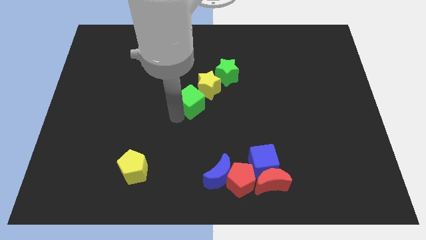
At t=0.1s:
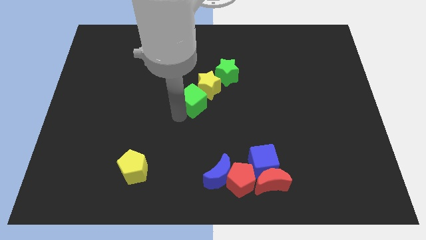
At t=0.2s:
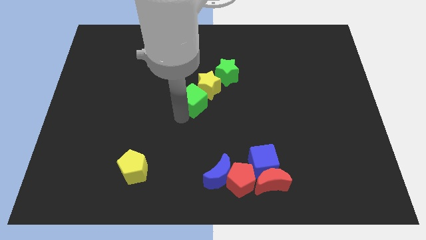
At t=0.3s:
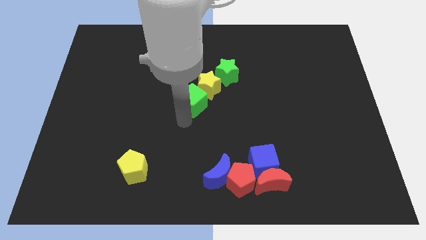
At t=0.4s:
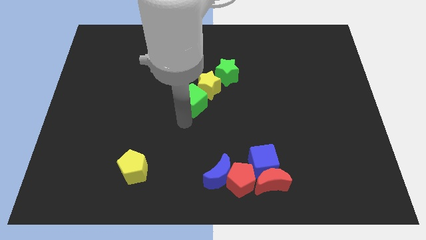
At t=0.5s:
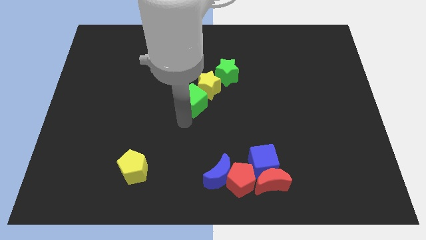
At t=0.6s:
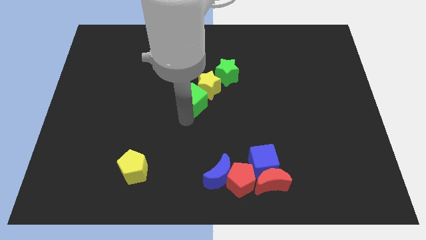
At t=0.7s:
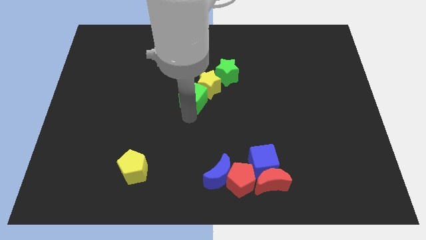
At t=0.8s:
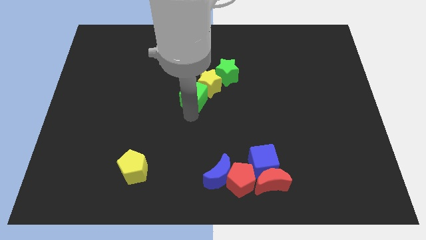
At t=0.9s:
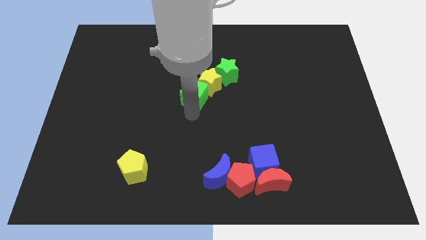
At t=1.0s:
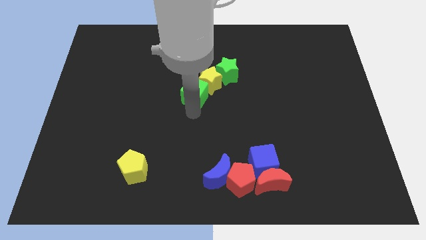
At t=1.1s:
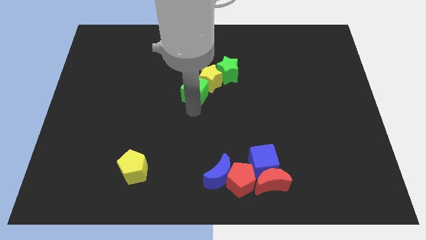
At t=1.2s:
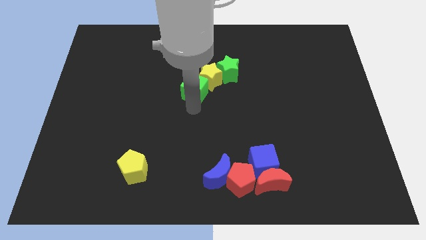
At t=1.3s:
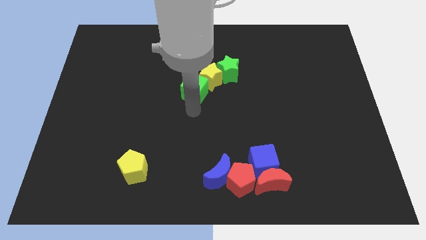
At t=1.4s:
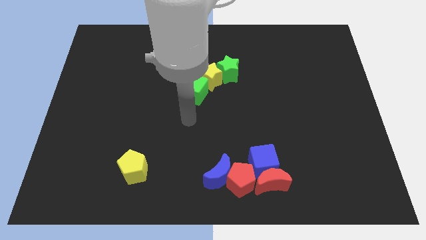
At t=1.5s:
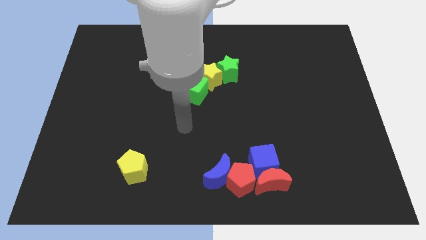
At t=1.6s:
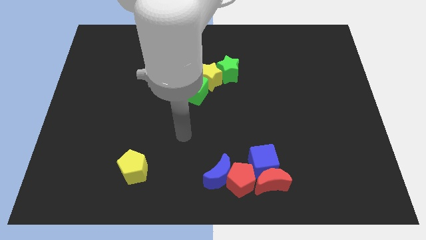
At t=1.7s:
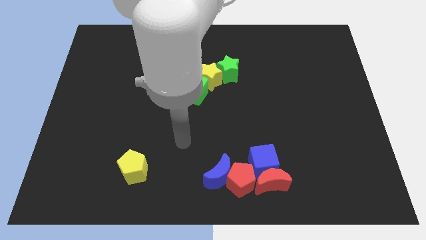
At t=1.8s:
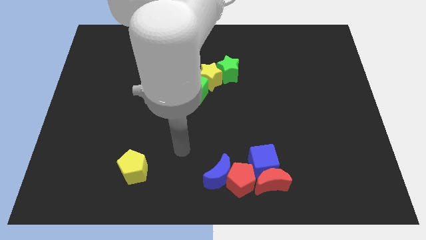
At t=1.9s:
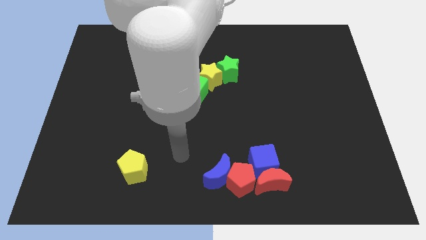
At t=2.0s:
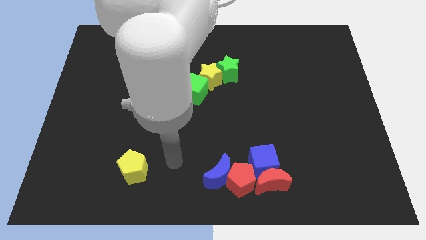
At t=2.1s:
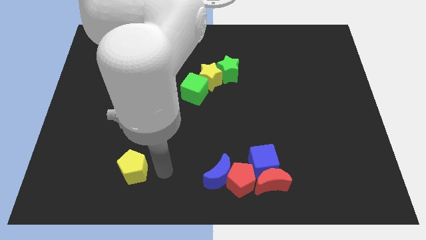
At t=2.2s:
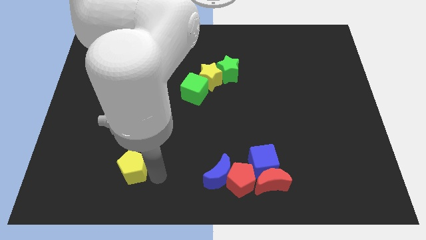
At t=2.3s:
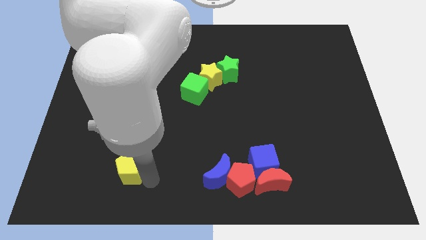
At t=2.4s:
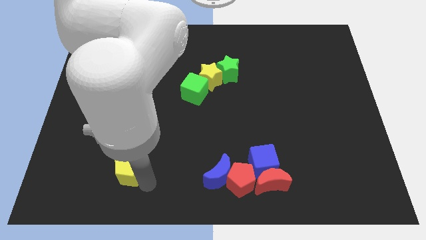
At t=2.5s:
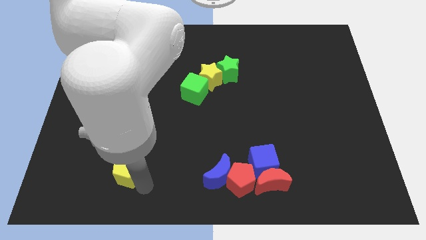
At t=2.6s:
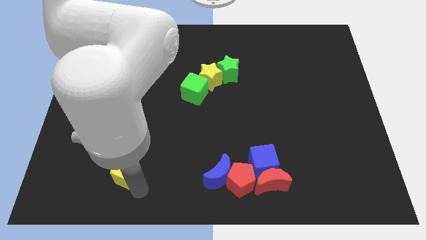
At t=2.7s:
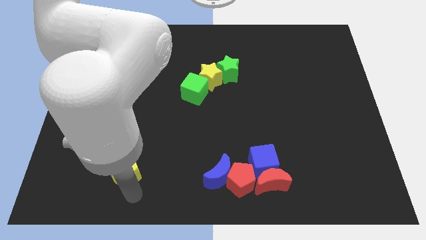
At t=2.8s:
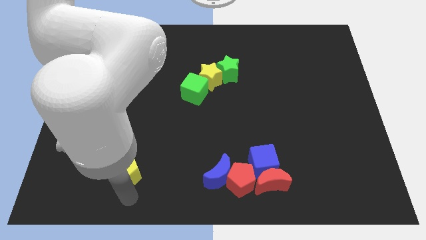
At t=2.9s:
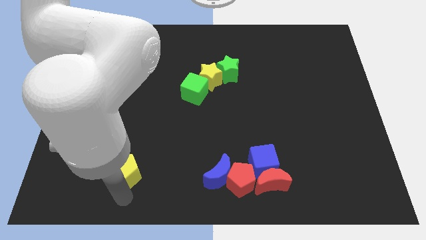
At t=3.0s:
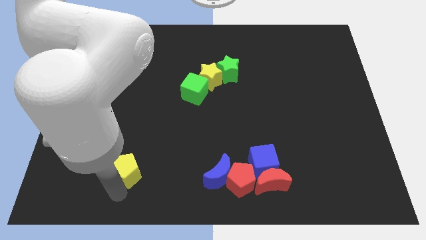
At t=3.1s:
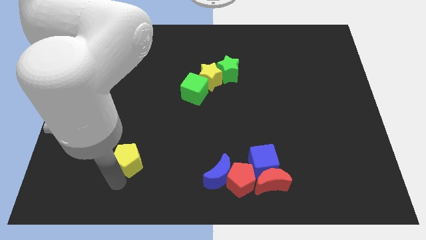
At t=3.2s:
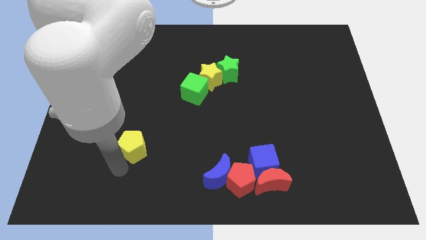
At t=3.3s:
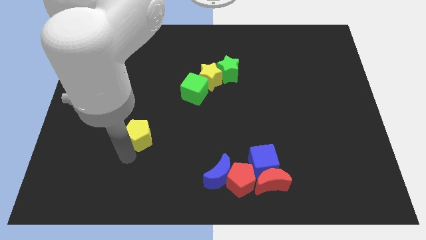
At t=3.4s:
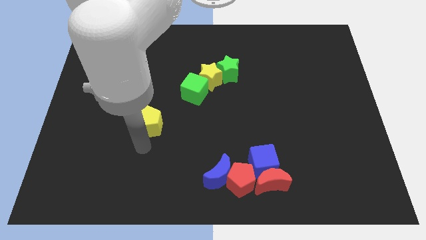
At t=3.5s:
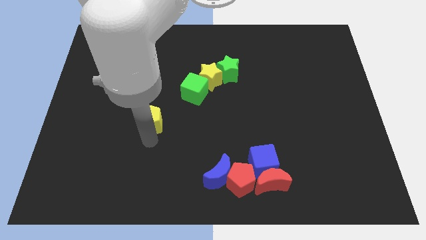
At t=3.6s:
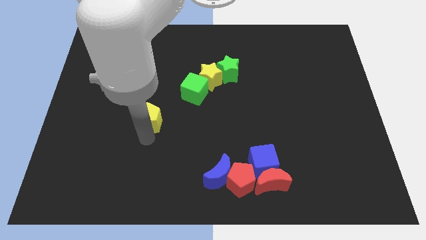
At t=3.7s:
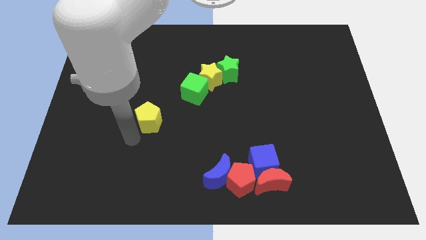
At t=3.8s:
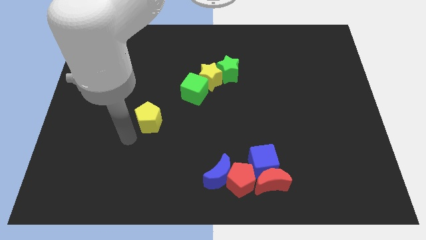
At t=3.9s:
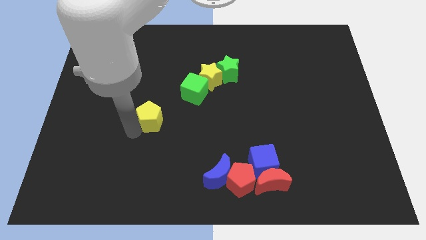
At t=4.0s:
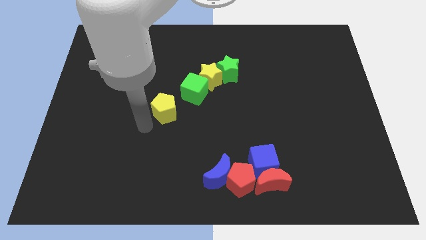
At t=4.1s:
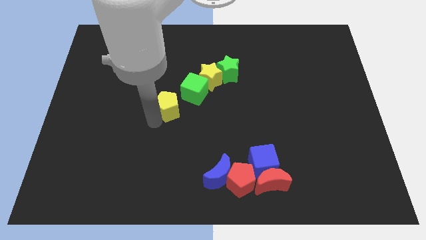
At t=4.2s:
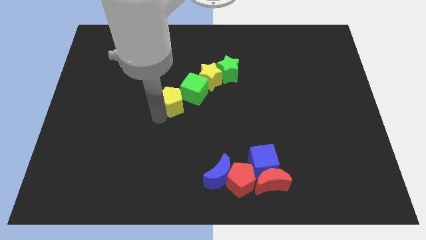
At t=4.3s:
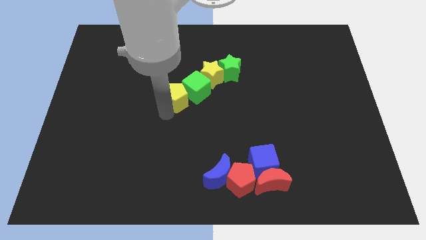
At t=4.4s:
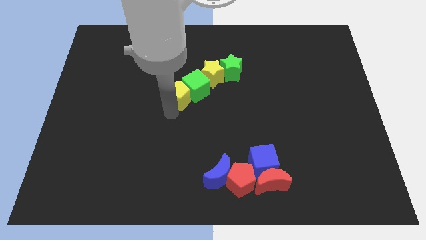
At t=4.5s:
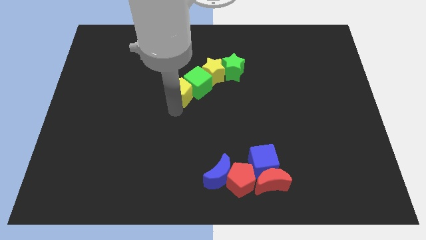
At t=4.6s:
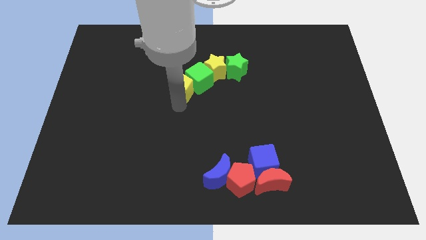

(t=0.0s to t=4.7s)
arrange a group of blocks in a line

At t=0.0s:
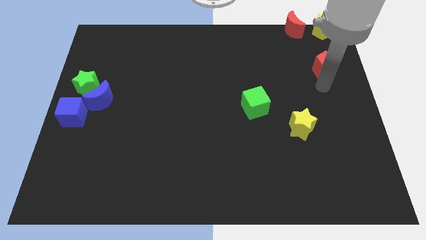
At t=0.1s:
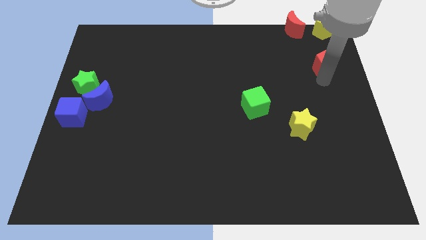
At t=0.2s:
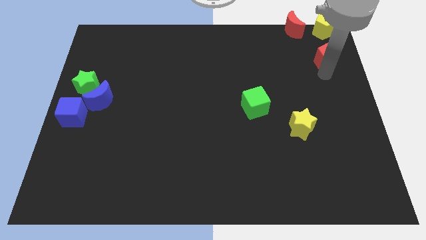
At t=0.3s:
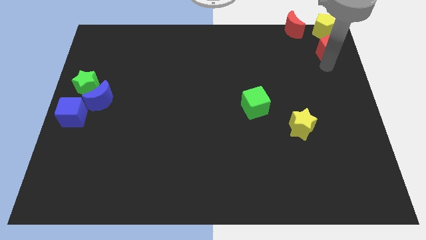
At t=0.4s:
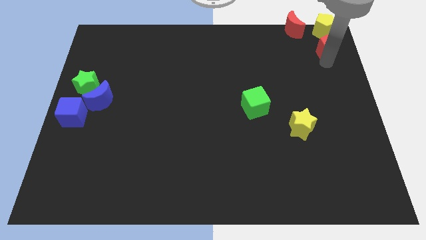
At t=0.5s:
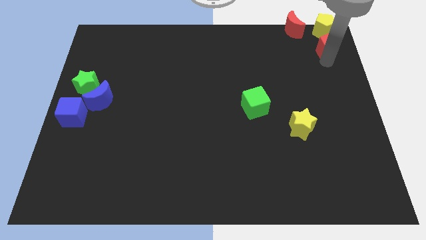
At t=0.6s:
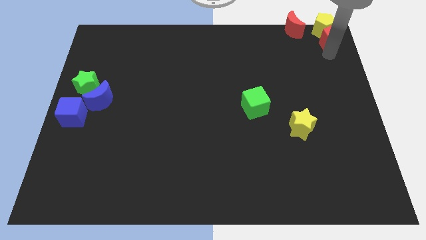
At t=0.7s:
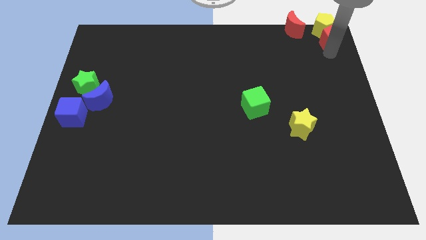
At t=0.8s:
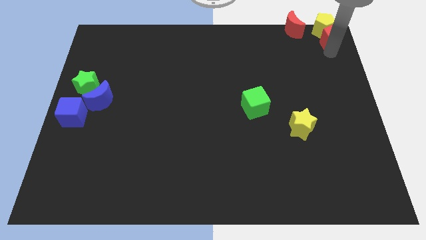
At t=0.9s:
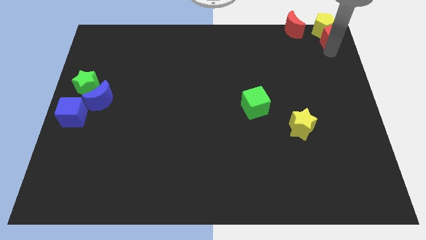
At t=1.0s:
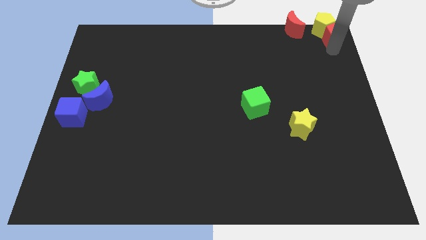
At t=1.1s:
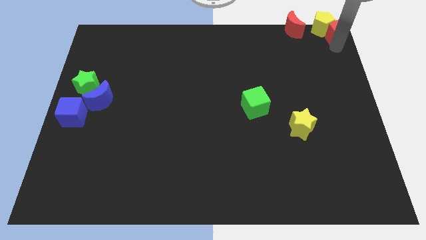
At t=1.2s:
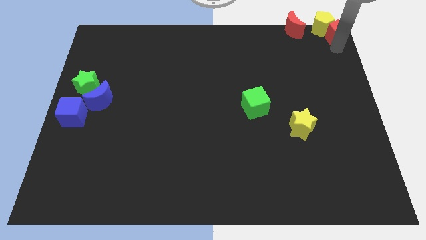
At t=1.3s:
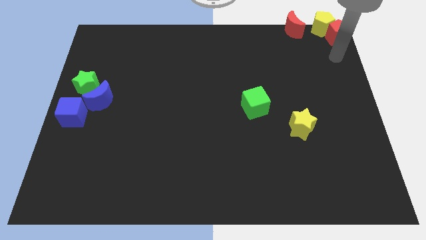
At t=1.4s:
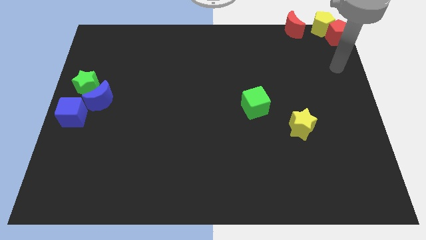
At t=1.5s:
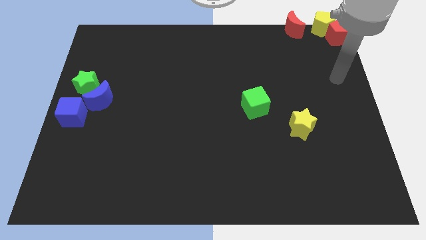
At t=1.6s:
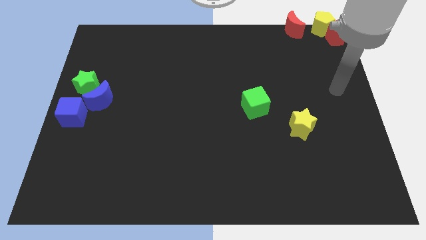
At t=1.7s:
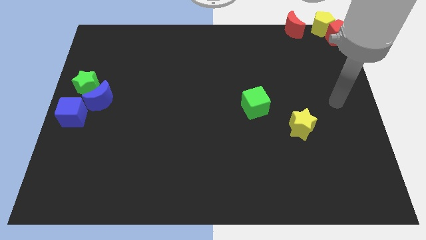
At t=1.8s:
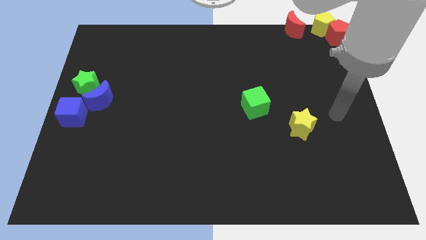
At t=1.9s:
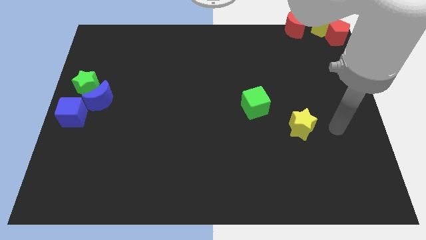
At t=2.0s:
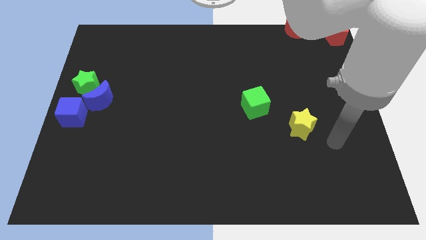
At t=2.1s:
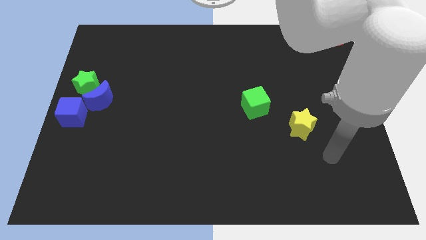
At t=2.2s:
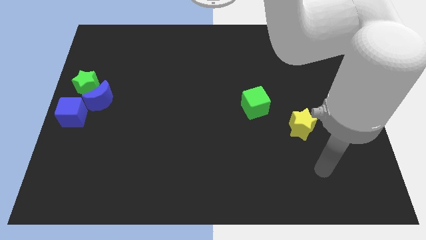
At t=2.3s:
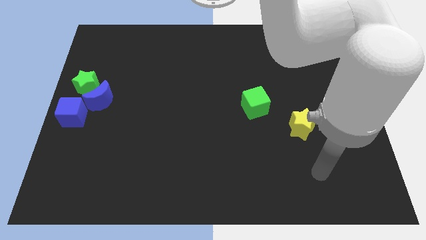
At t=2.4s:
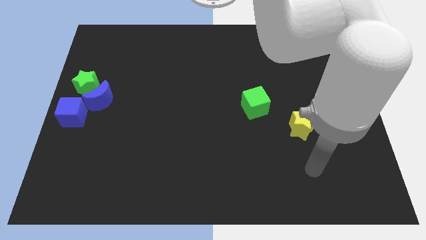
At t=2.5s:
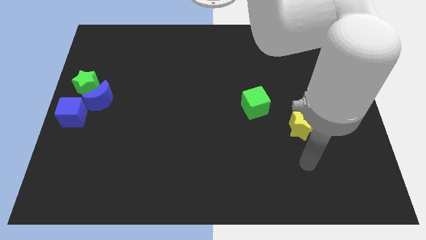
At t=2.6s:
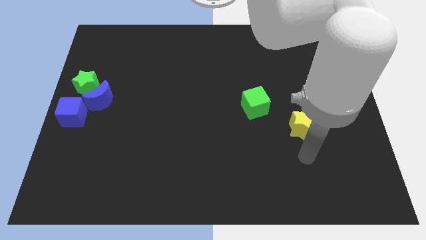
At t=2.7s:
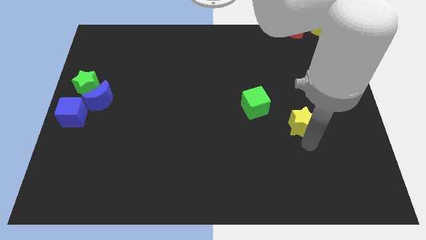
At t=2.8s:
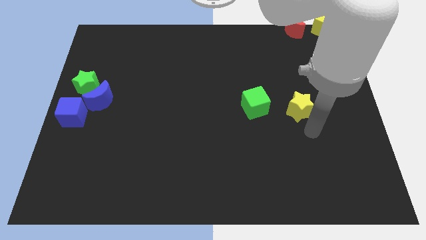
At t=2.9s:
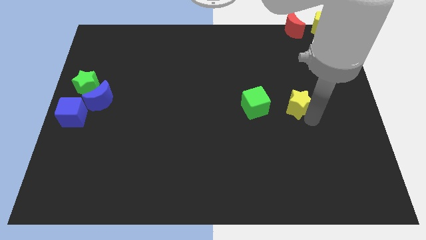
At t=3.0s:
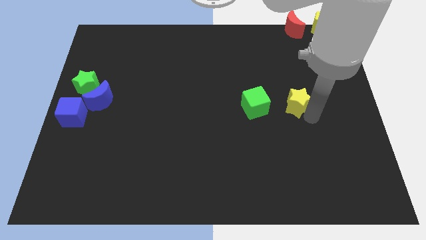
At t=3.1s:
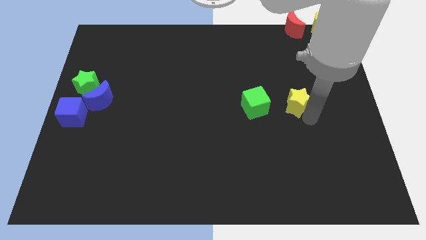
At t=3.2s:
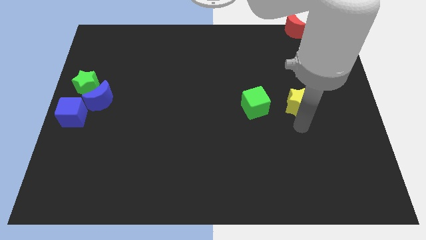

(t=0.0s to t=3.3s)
place the yellow star to the right of the green cube

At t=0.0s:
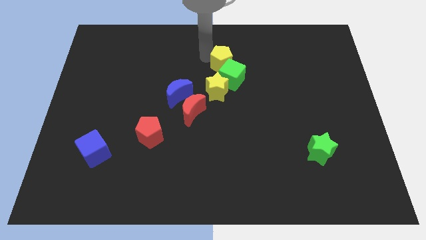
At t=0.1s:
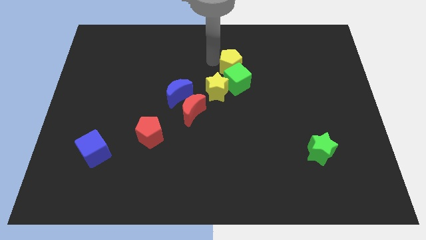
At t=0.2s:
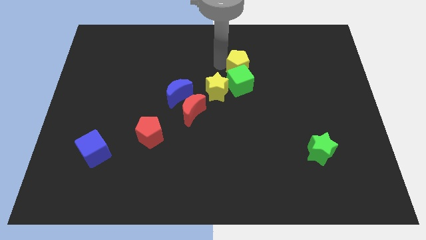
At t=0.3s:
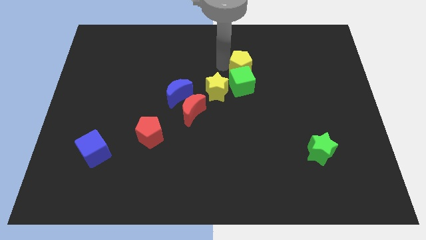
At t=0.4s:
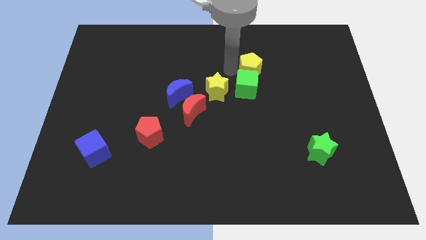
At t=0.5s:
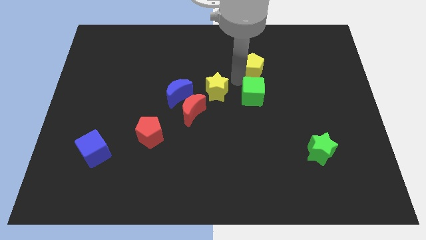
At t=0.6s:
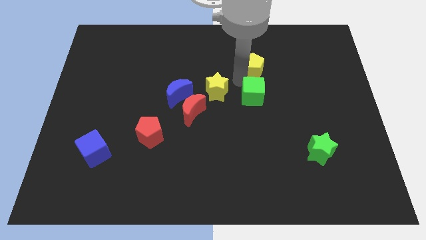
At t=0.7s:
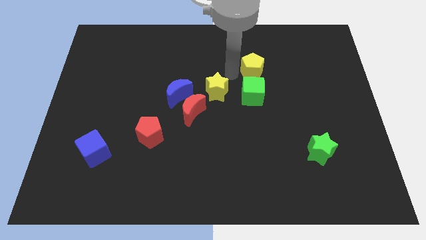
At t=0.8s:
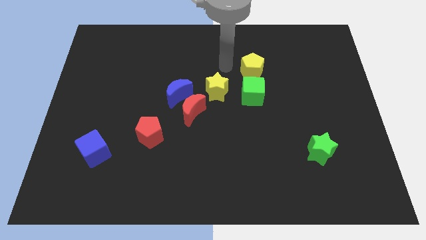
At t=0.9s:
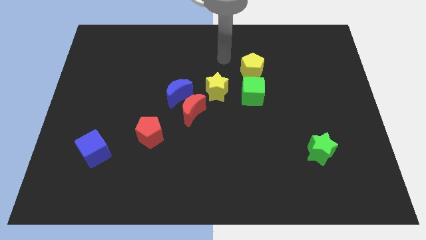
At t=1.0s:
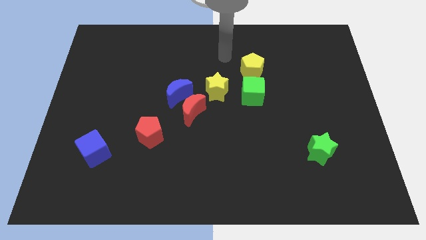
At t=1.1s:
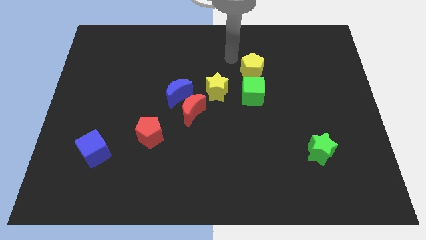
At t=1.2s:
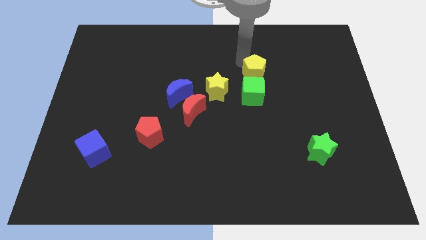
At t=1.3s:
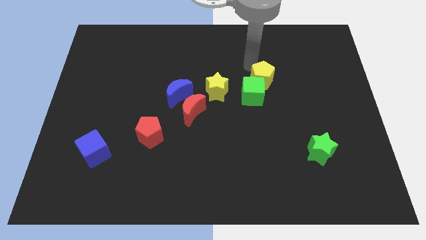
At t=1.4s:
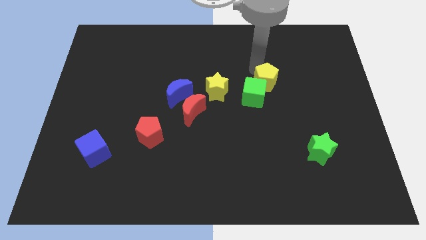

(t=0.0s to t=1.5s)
push the yellow pentagon into the green cube
